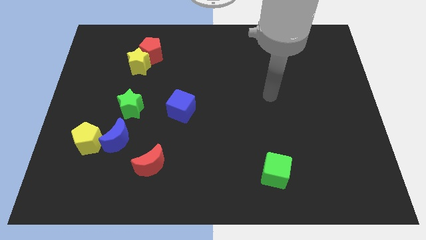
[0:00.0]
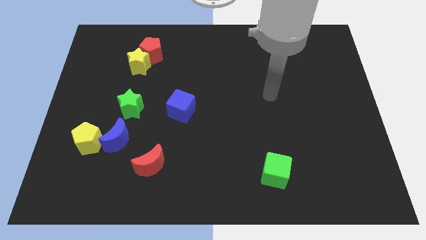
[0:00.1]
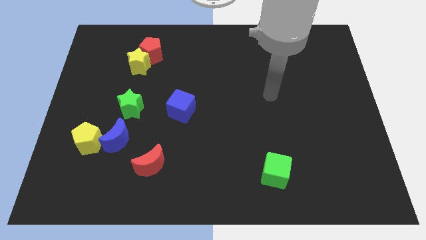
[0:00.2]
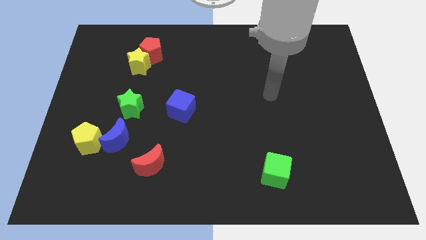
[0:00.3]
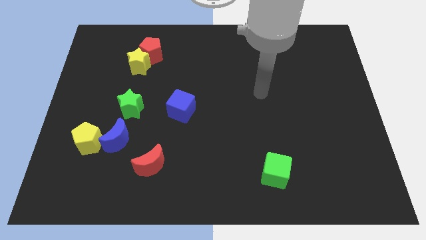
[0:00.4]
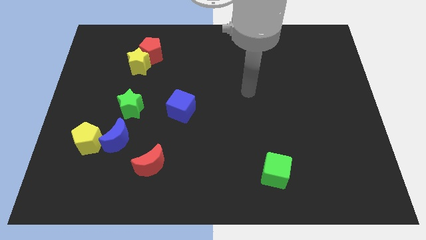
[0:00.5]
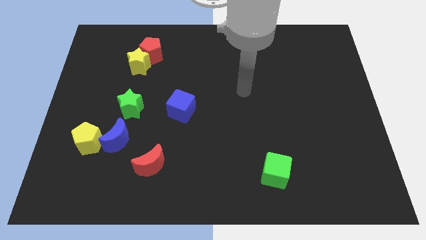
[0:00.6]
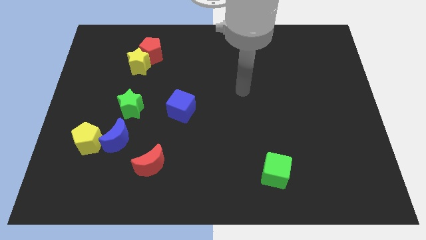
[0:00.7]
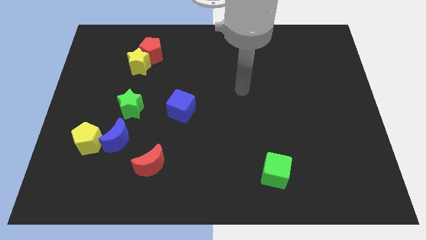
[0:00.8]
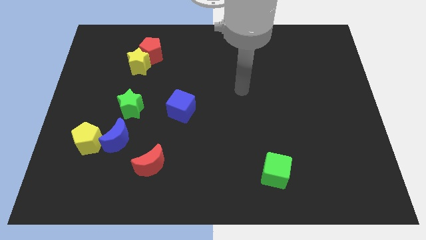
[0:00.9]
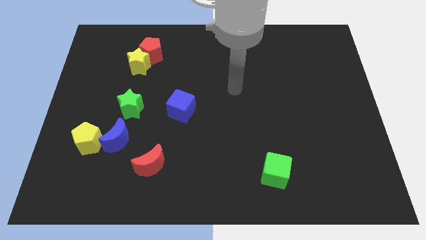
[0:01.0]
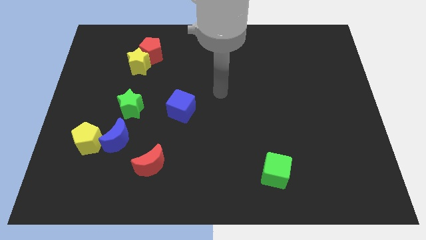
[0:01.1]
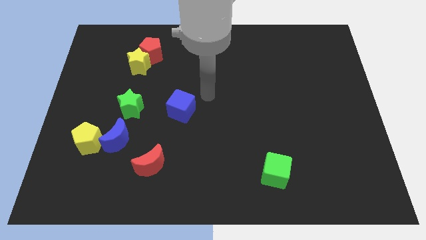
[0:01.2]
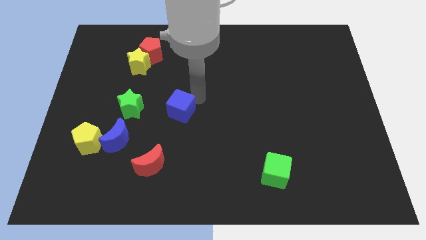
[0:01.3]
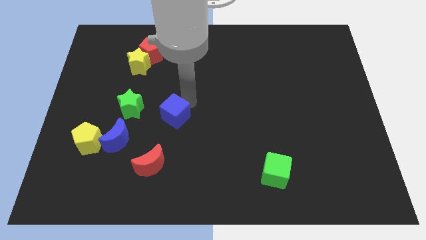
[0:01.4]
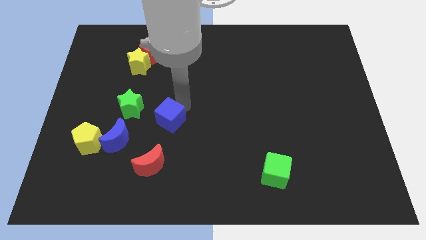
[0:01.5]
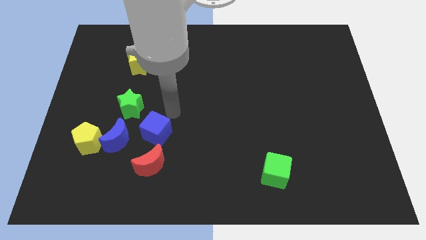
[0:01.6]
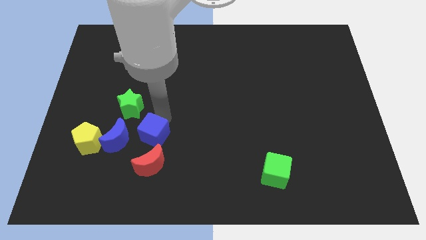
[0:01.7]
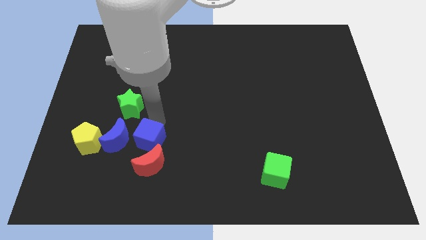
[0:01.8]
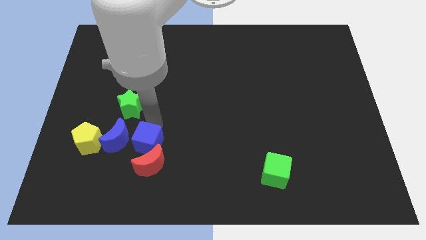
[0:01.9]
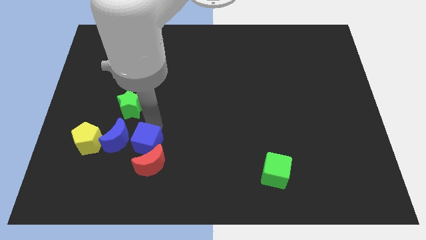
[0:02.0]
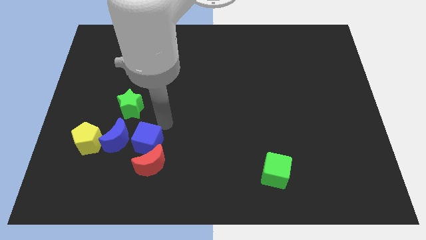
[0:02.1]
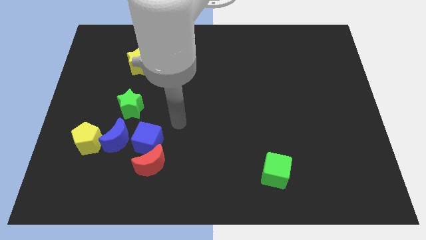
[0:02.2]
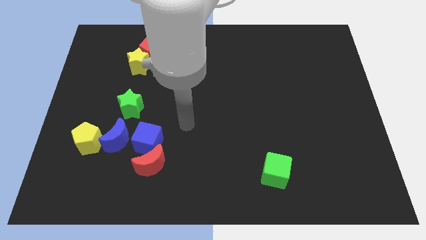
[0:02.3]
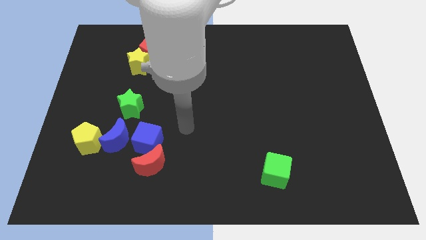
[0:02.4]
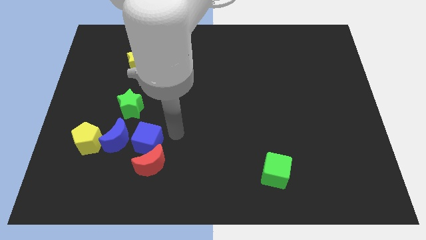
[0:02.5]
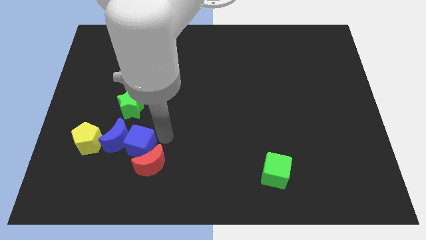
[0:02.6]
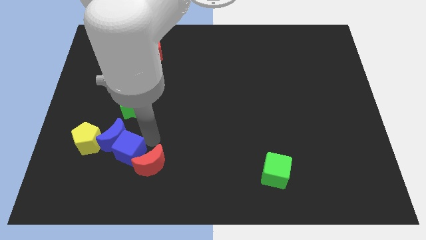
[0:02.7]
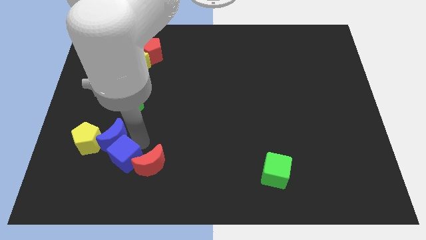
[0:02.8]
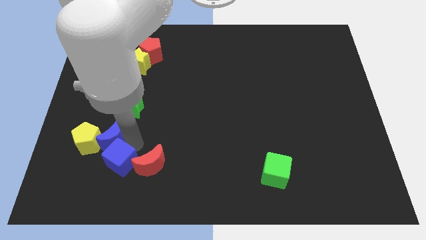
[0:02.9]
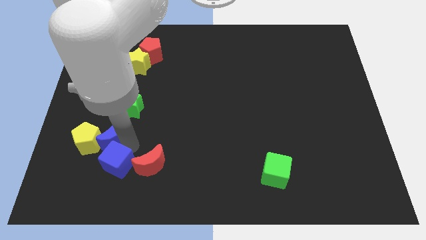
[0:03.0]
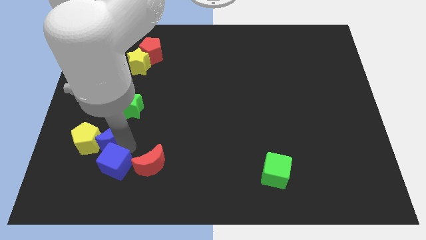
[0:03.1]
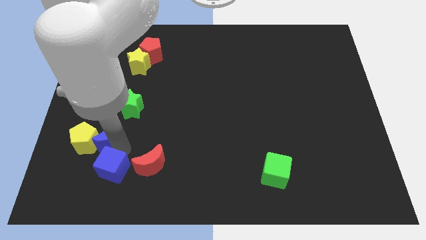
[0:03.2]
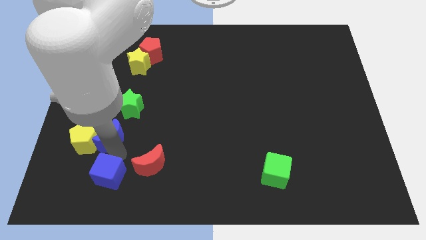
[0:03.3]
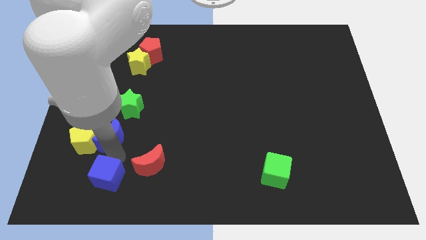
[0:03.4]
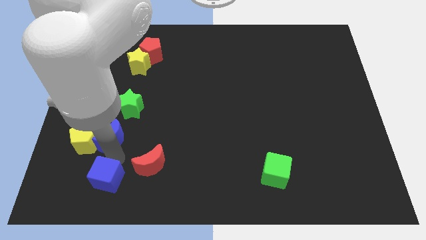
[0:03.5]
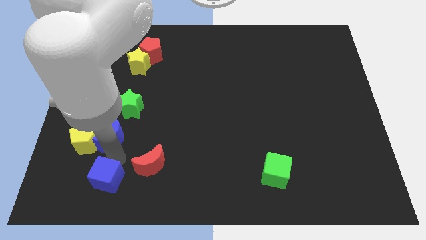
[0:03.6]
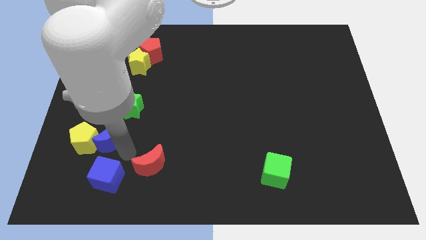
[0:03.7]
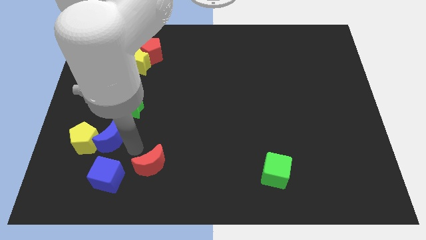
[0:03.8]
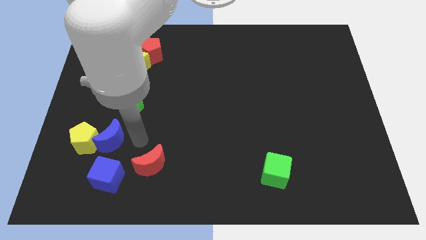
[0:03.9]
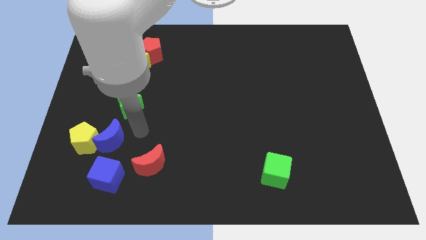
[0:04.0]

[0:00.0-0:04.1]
move the blue cube towards the bottom left

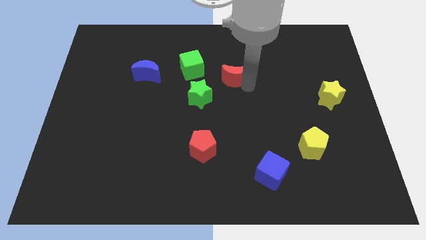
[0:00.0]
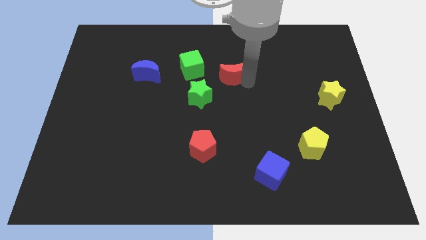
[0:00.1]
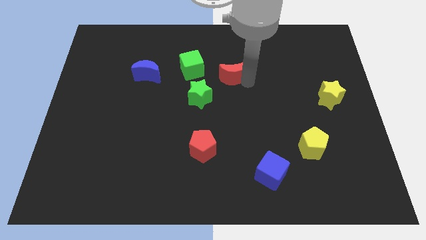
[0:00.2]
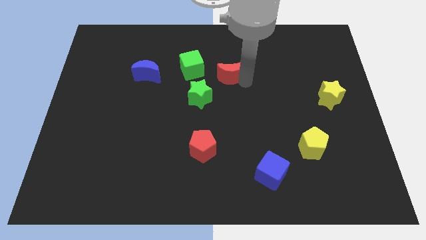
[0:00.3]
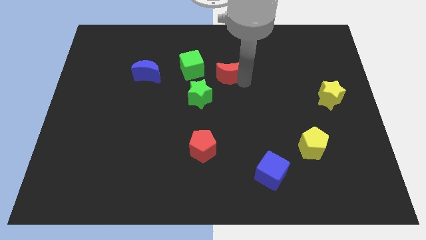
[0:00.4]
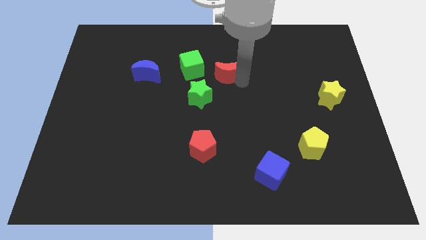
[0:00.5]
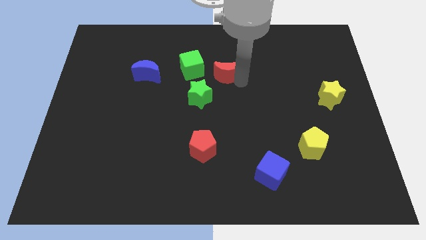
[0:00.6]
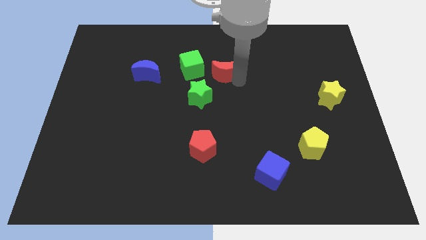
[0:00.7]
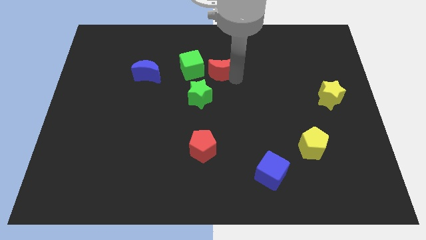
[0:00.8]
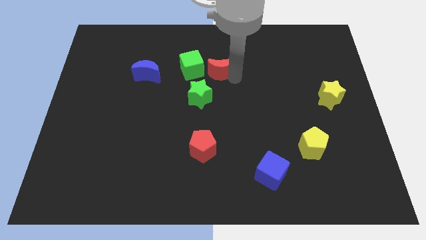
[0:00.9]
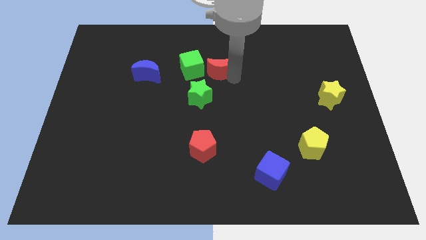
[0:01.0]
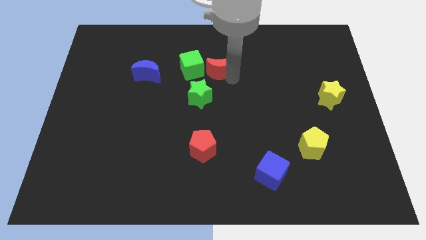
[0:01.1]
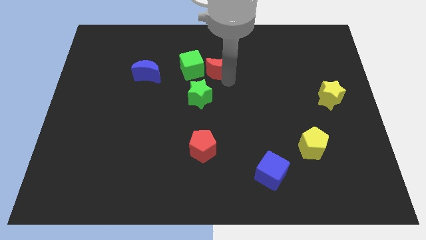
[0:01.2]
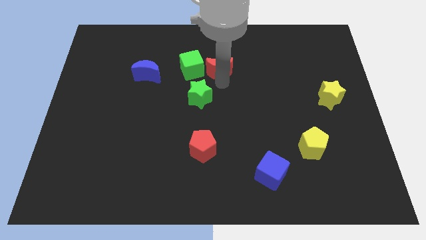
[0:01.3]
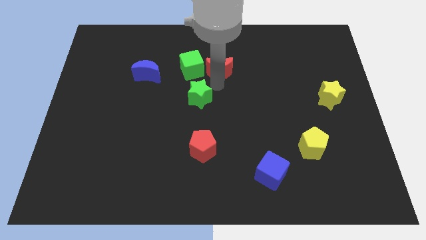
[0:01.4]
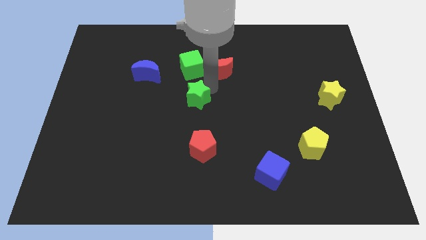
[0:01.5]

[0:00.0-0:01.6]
place the red moon close to the green cube

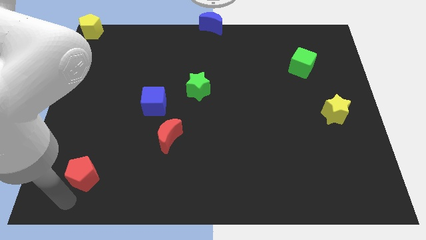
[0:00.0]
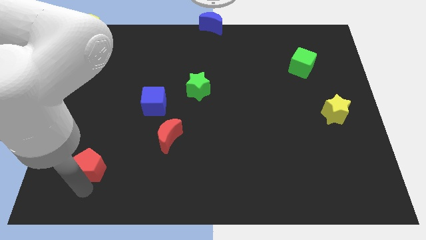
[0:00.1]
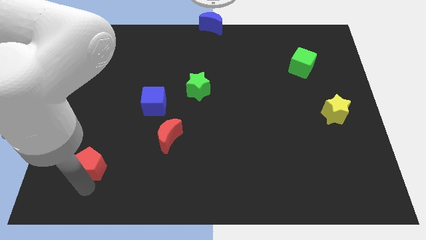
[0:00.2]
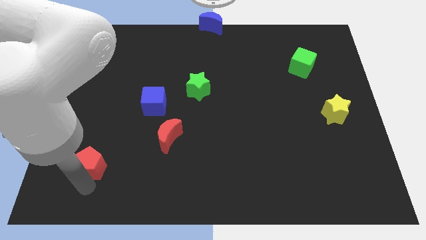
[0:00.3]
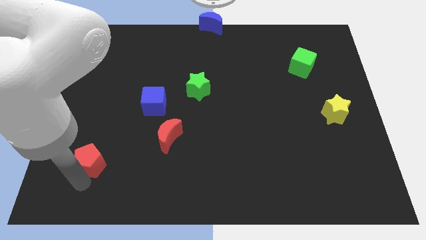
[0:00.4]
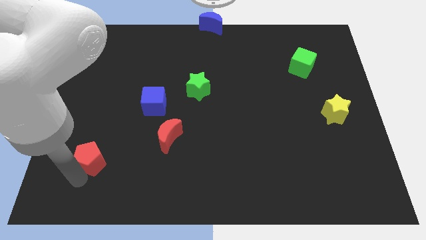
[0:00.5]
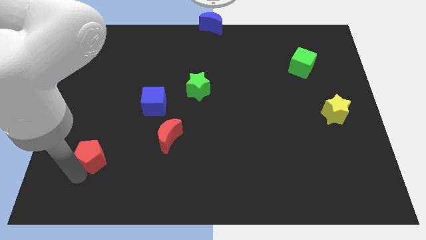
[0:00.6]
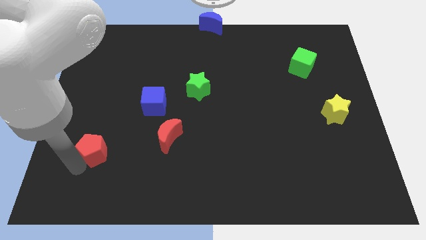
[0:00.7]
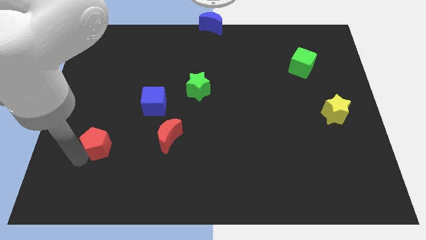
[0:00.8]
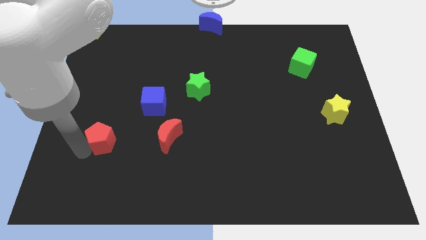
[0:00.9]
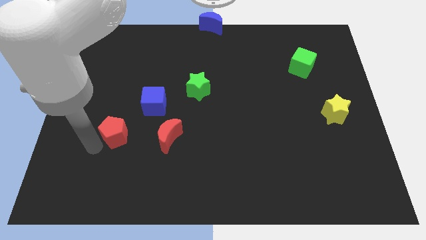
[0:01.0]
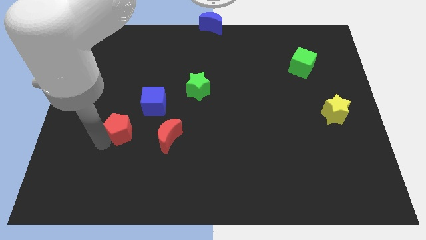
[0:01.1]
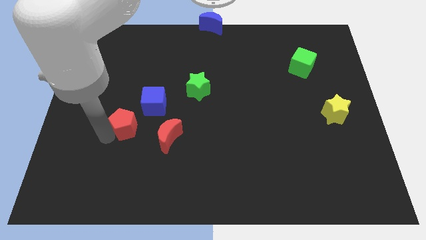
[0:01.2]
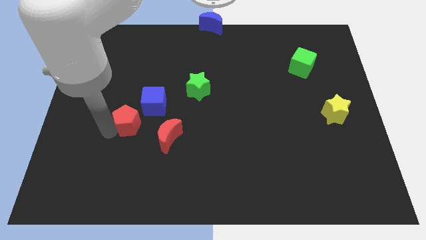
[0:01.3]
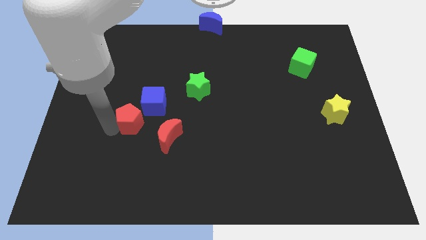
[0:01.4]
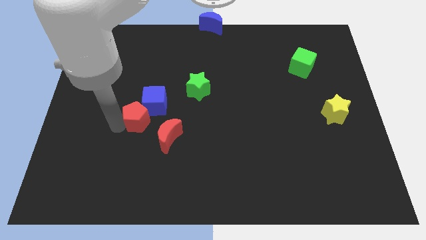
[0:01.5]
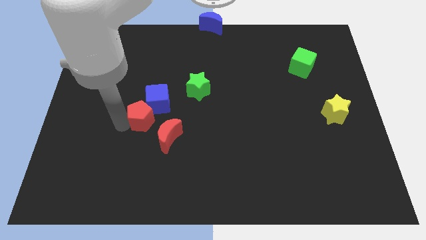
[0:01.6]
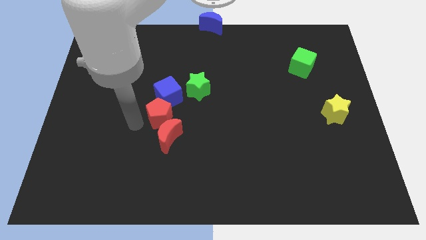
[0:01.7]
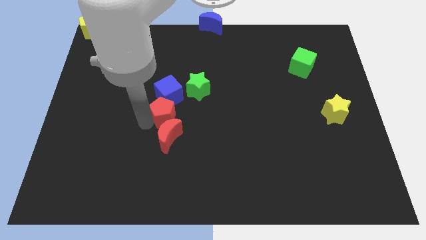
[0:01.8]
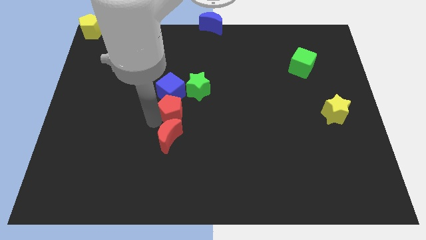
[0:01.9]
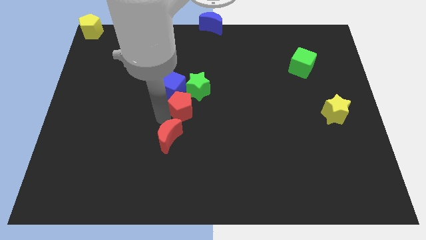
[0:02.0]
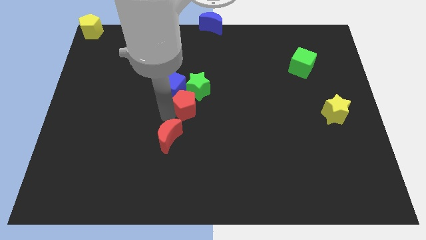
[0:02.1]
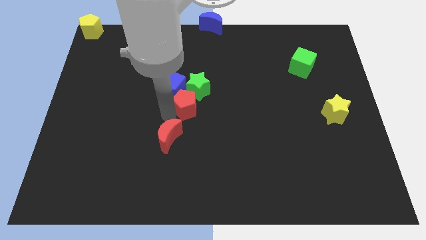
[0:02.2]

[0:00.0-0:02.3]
place the red pentagon between red moon and green star

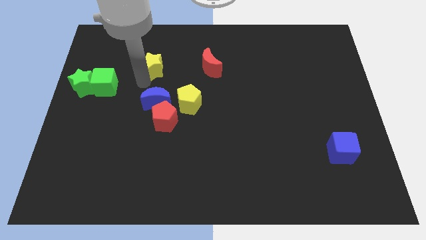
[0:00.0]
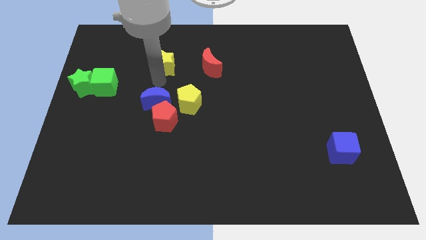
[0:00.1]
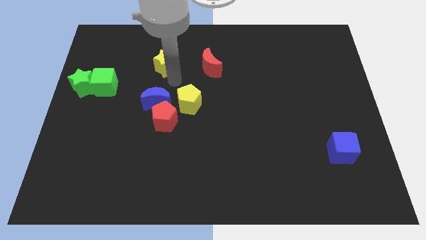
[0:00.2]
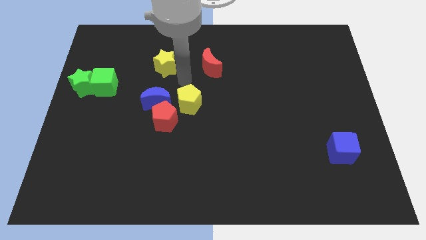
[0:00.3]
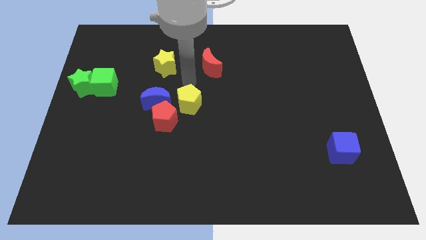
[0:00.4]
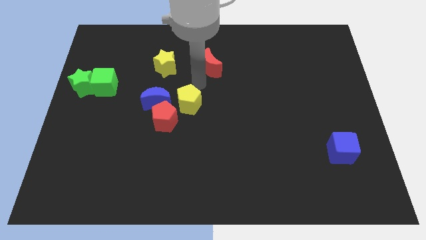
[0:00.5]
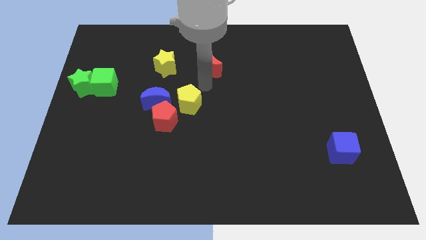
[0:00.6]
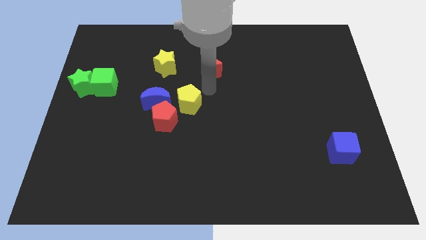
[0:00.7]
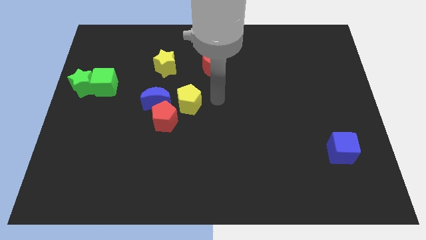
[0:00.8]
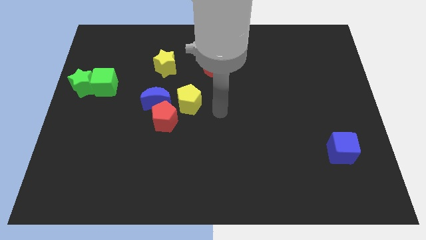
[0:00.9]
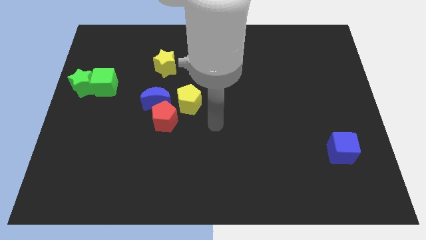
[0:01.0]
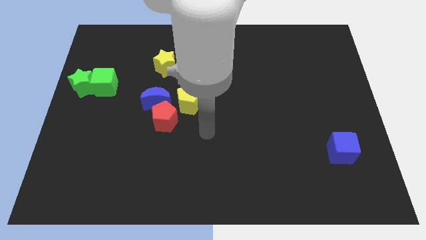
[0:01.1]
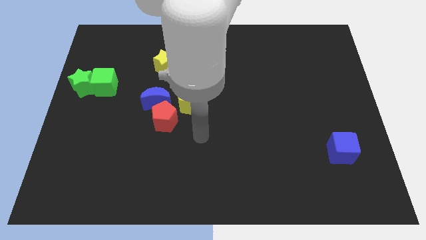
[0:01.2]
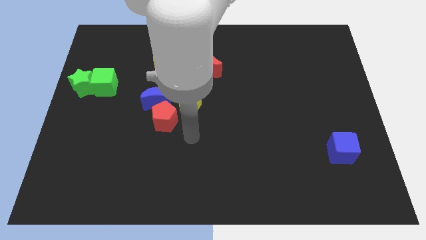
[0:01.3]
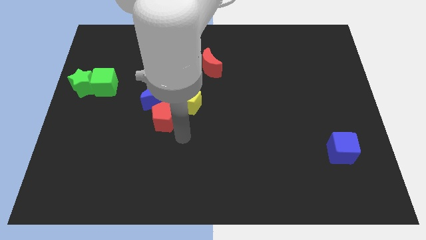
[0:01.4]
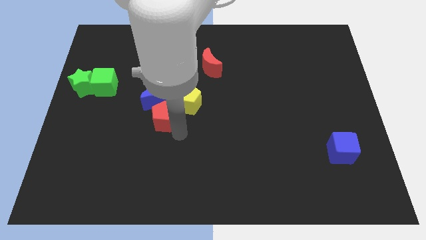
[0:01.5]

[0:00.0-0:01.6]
move your arm to the bottom right of the red pentagon
